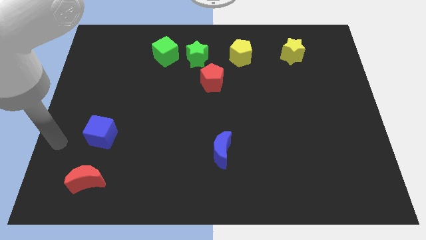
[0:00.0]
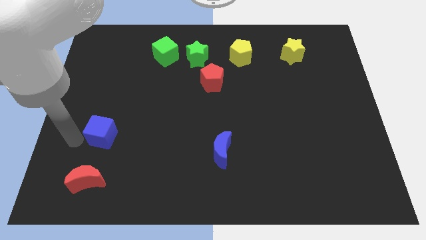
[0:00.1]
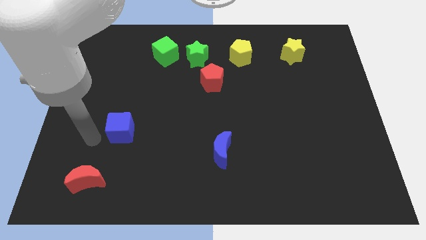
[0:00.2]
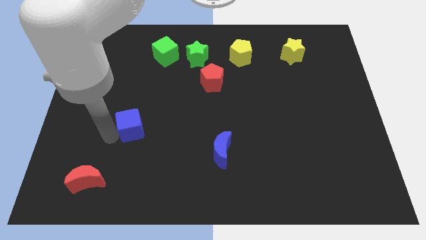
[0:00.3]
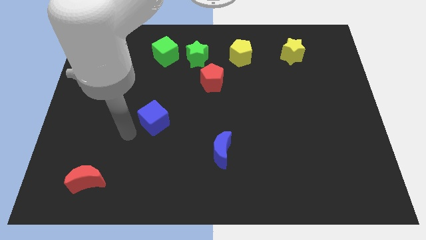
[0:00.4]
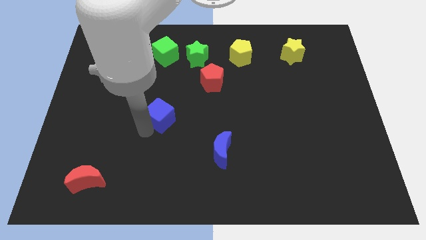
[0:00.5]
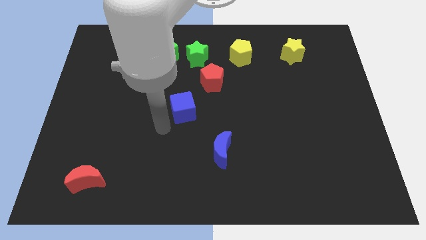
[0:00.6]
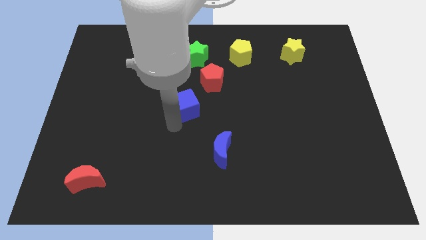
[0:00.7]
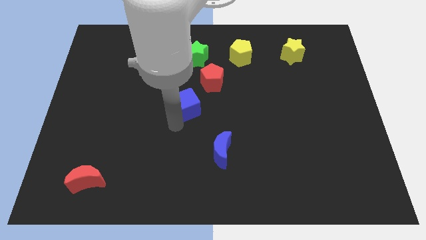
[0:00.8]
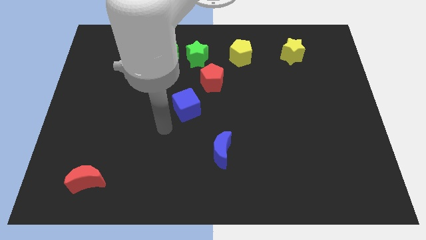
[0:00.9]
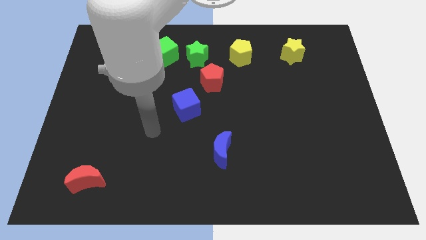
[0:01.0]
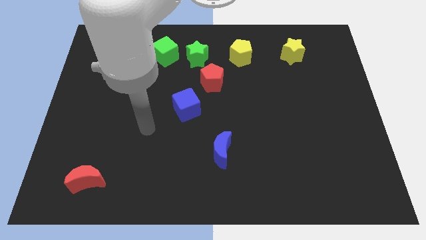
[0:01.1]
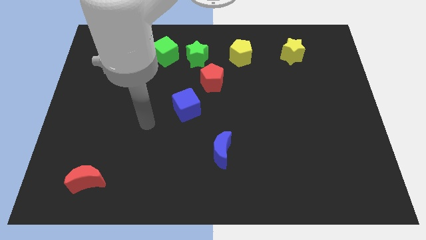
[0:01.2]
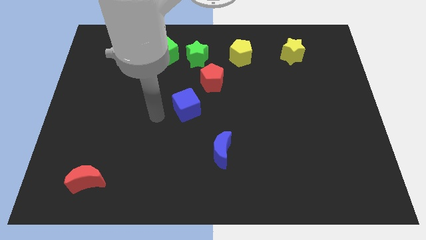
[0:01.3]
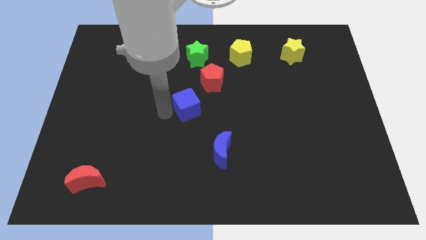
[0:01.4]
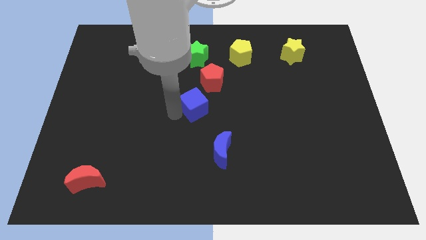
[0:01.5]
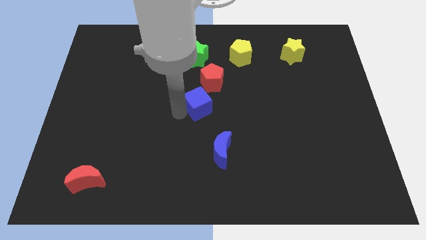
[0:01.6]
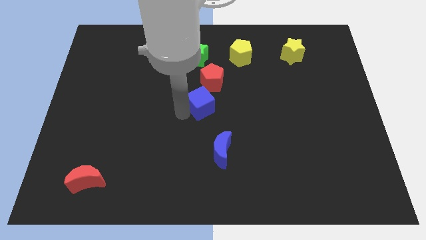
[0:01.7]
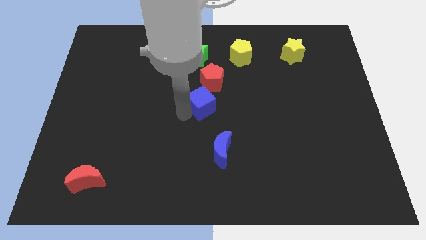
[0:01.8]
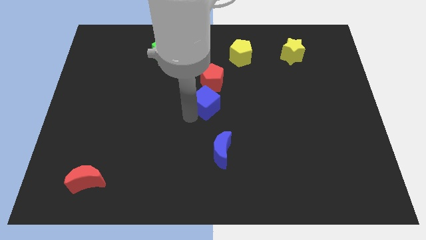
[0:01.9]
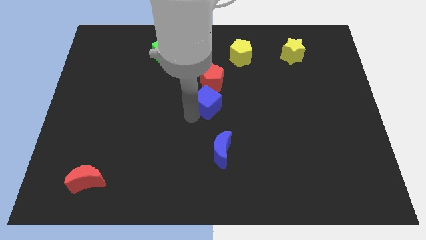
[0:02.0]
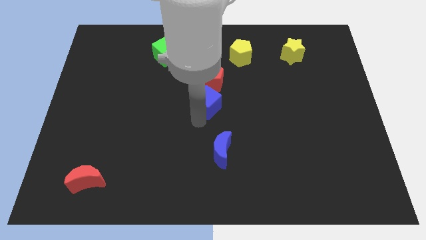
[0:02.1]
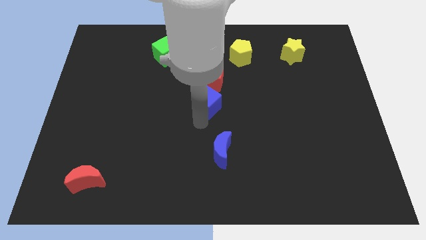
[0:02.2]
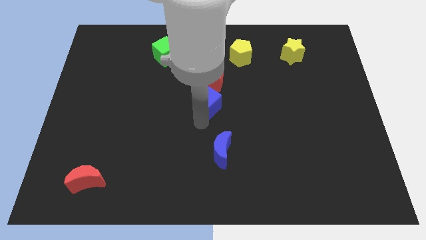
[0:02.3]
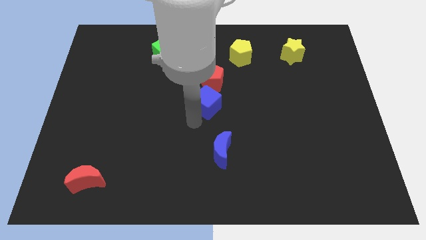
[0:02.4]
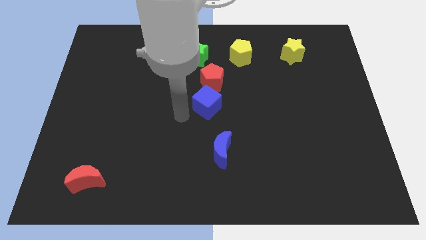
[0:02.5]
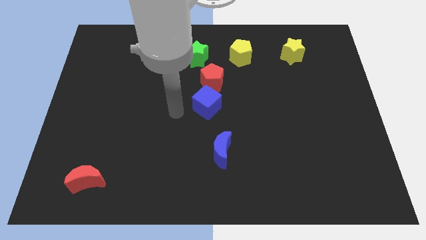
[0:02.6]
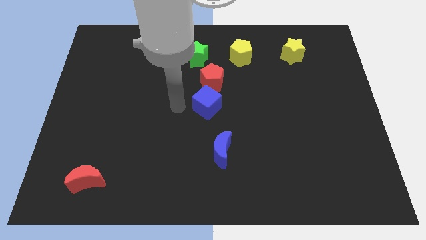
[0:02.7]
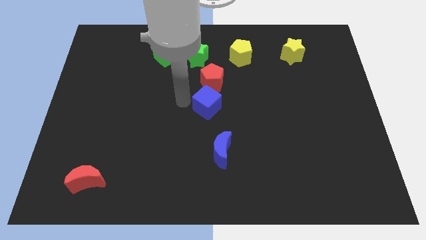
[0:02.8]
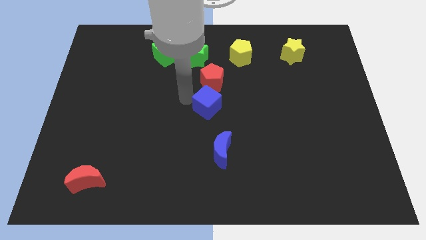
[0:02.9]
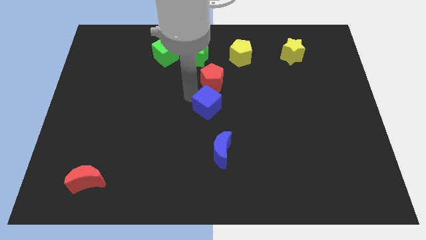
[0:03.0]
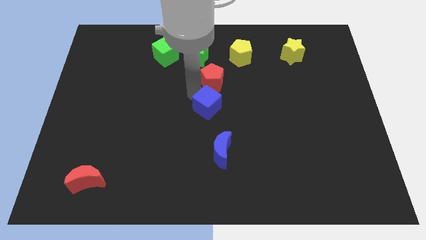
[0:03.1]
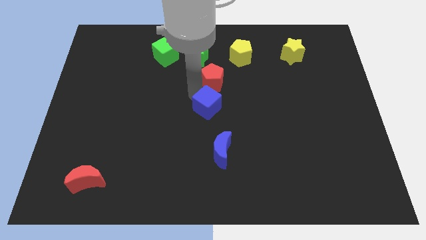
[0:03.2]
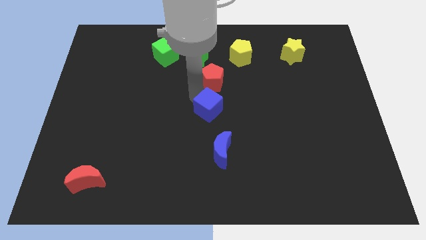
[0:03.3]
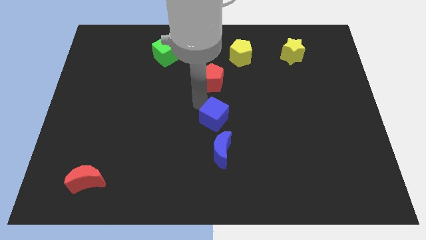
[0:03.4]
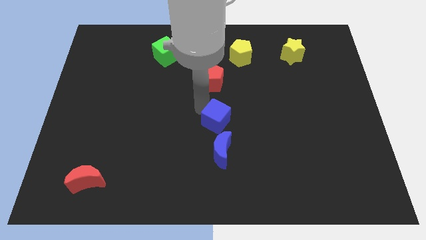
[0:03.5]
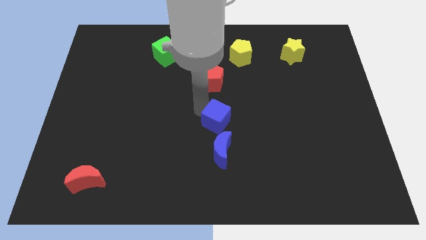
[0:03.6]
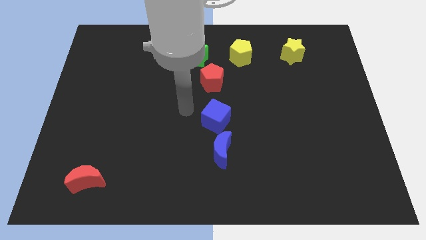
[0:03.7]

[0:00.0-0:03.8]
move the blue cube above to the blue crescent

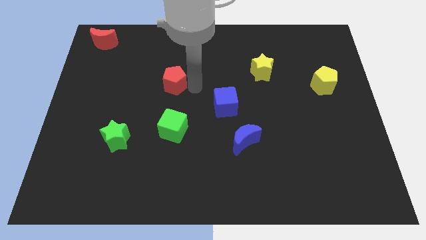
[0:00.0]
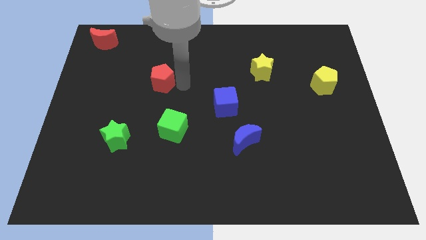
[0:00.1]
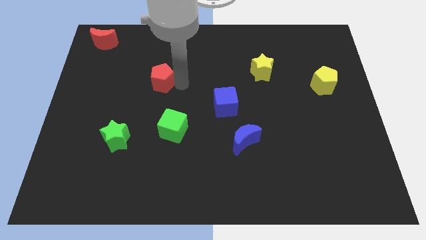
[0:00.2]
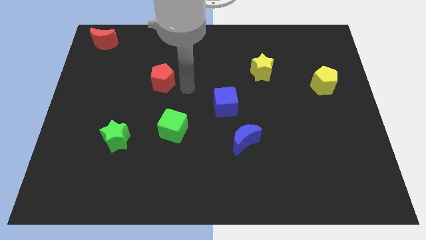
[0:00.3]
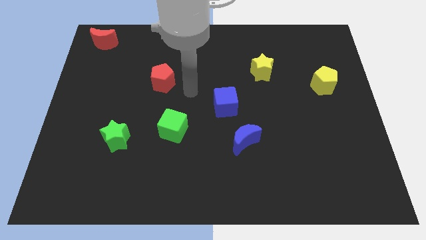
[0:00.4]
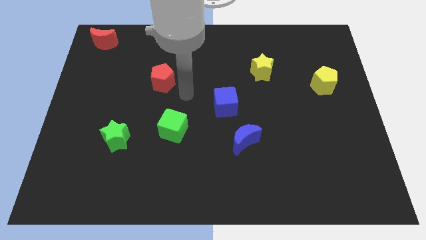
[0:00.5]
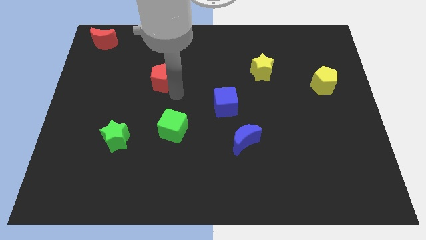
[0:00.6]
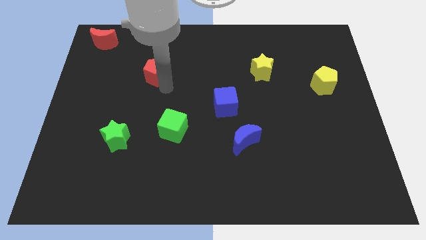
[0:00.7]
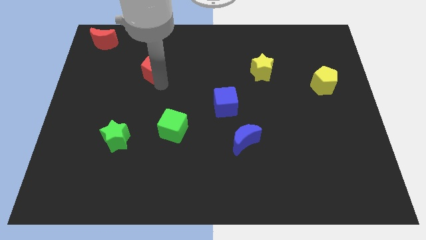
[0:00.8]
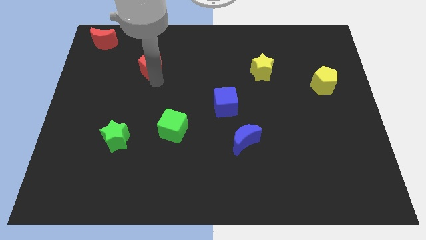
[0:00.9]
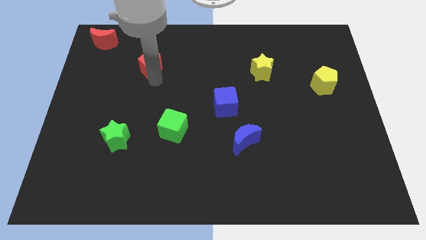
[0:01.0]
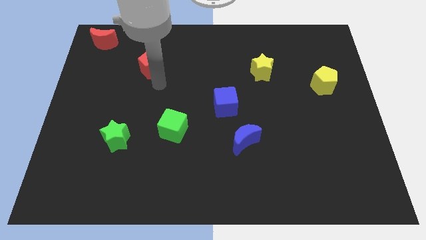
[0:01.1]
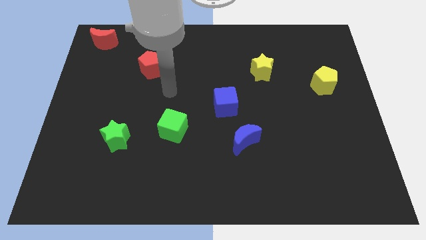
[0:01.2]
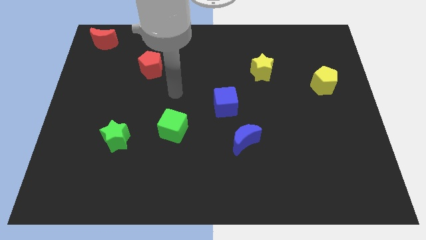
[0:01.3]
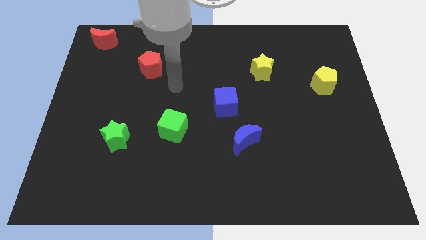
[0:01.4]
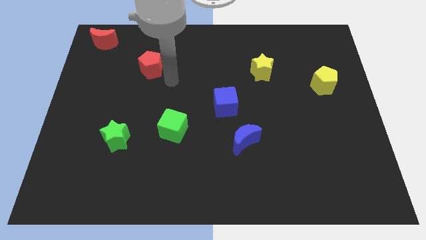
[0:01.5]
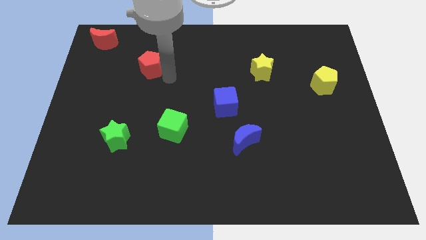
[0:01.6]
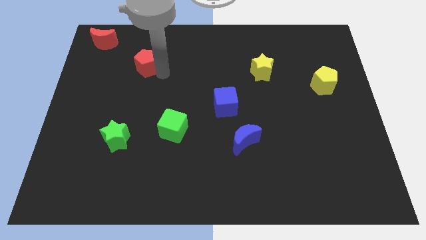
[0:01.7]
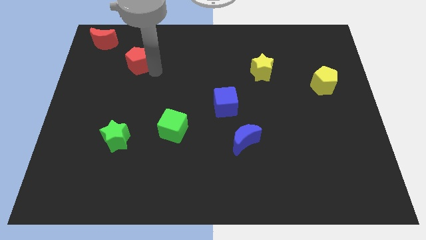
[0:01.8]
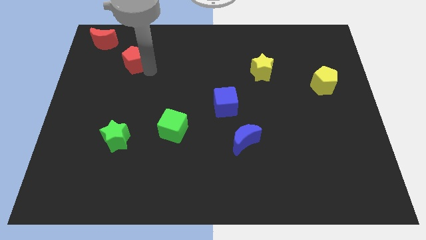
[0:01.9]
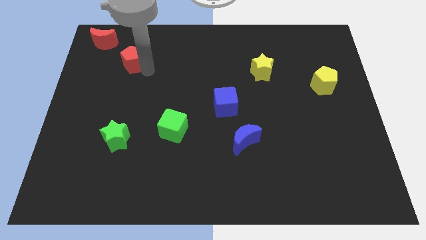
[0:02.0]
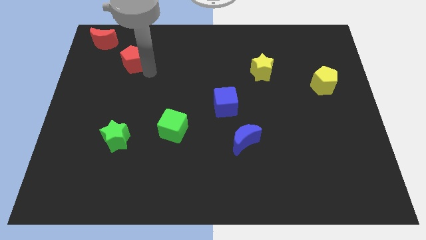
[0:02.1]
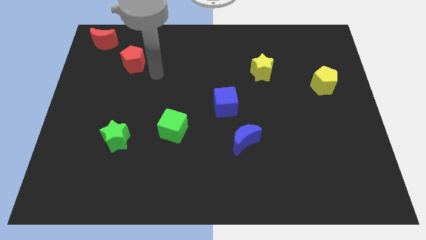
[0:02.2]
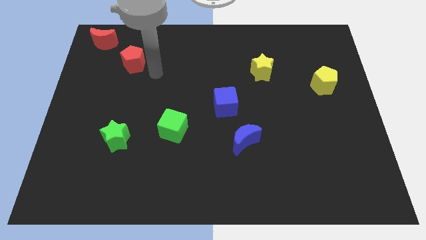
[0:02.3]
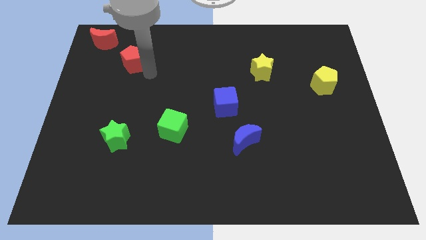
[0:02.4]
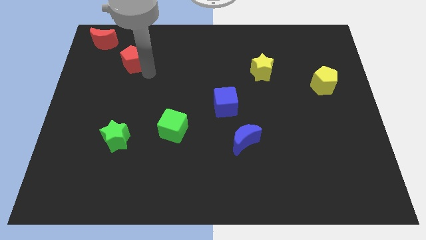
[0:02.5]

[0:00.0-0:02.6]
move the red pentagon to the top of the green star

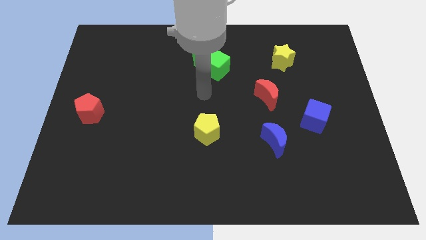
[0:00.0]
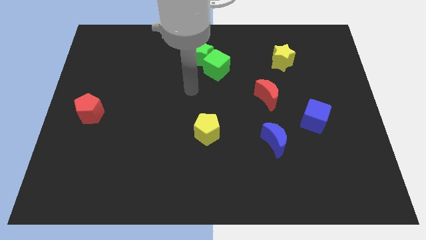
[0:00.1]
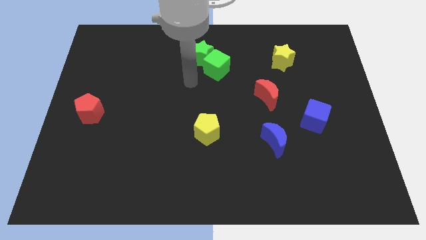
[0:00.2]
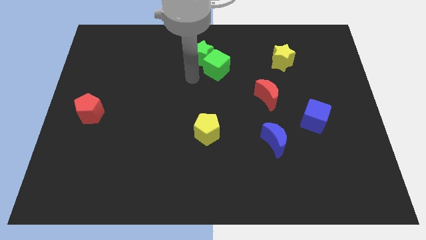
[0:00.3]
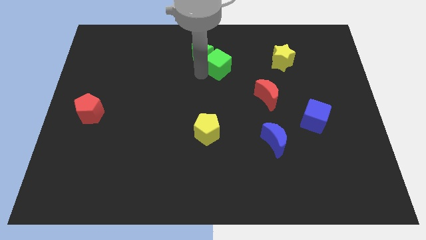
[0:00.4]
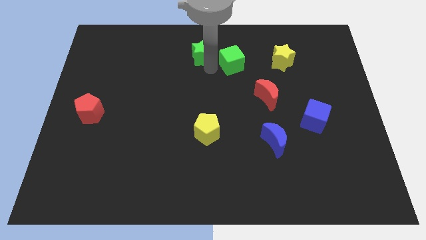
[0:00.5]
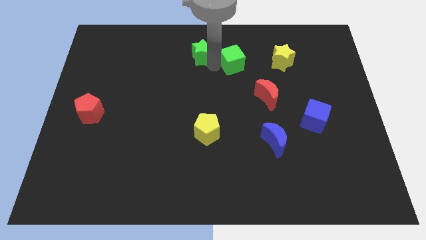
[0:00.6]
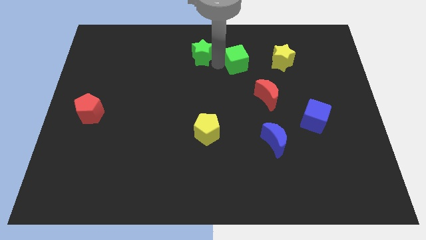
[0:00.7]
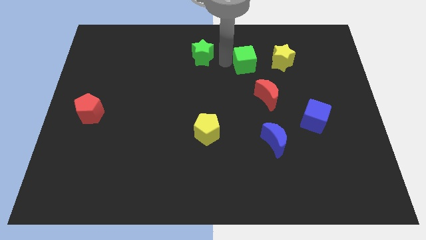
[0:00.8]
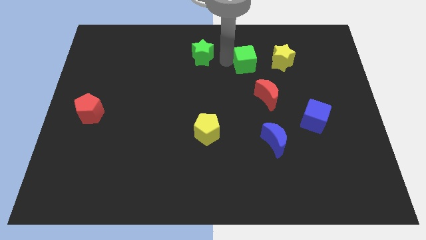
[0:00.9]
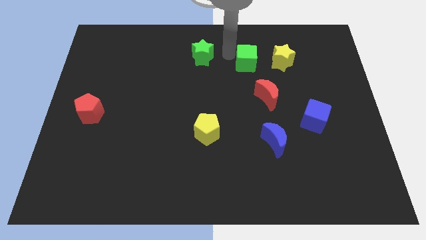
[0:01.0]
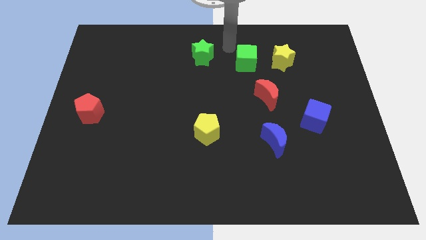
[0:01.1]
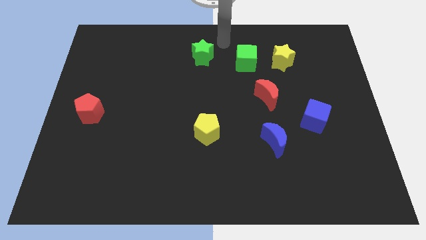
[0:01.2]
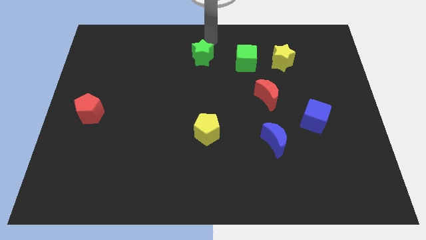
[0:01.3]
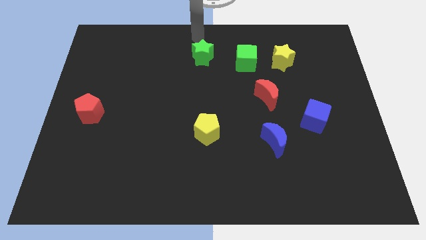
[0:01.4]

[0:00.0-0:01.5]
move the green cube to the left of the yellow star

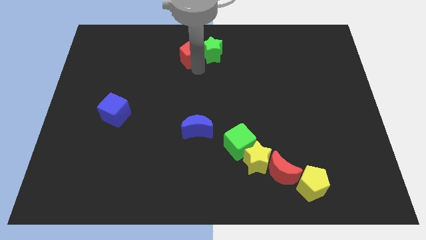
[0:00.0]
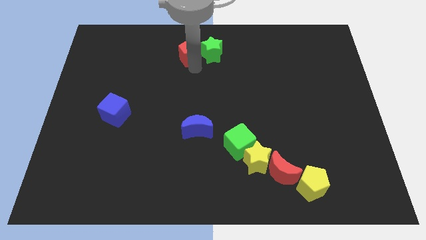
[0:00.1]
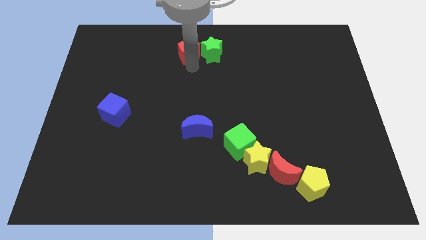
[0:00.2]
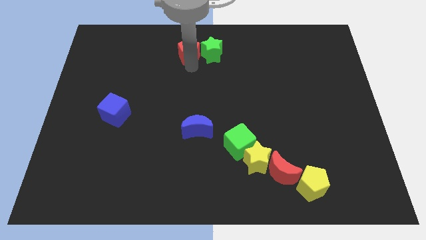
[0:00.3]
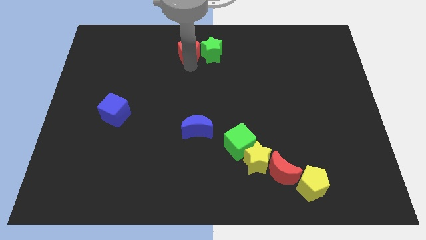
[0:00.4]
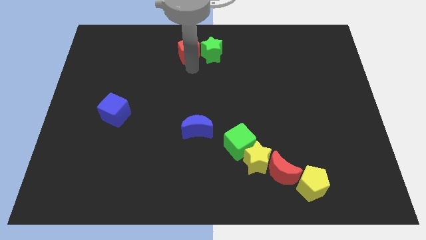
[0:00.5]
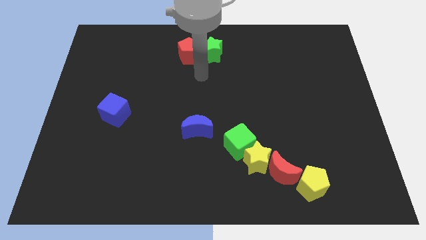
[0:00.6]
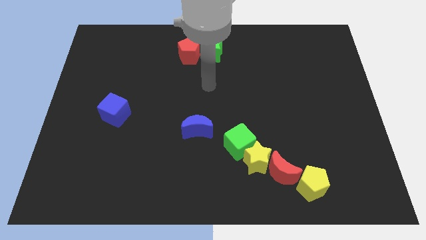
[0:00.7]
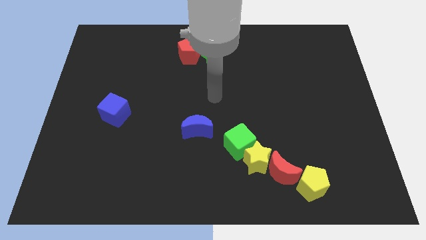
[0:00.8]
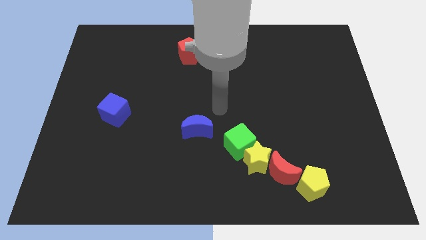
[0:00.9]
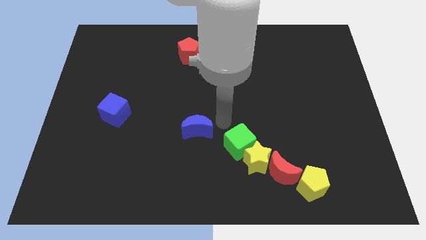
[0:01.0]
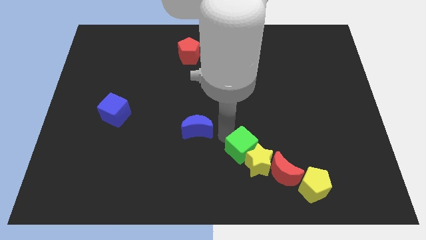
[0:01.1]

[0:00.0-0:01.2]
move your arm towards the green cube

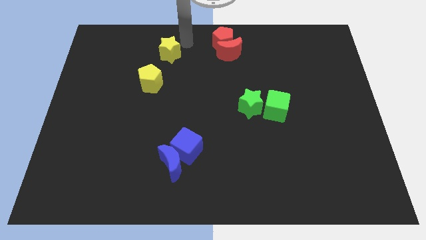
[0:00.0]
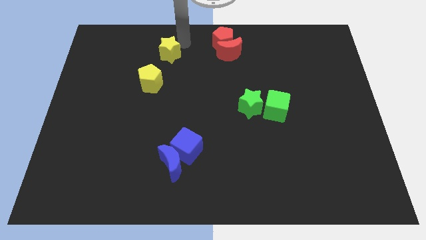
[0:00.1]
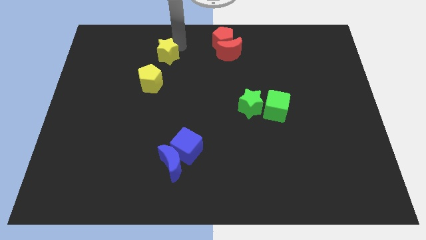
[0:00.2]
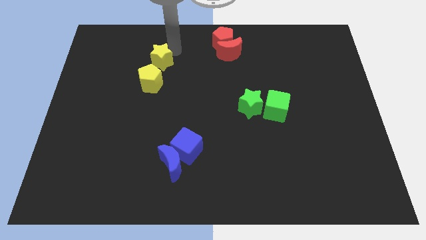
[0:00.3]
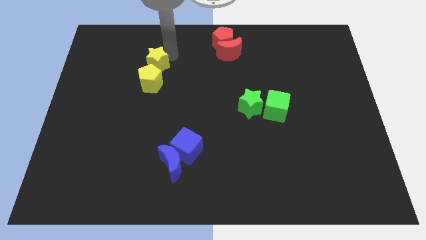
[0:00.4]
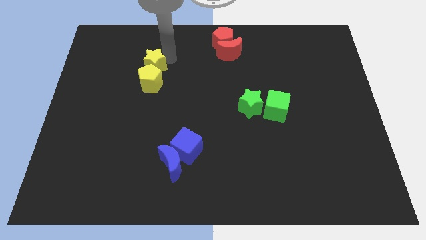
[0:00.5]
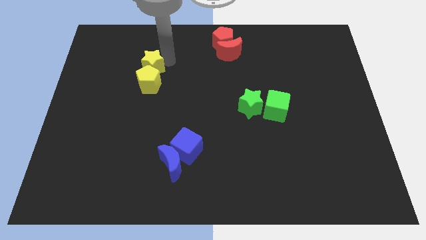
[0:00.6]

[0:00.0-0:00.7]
place the yellow star at the top of yellow pentagon
